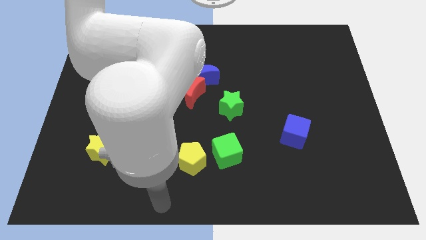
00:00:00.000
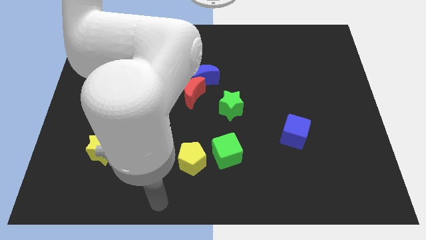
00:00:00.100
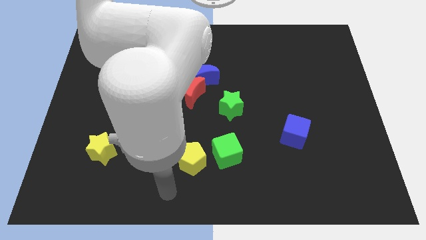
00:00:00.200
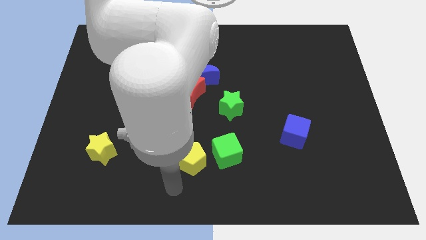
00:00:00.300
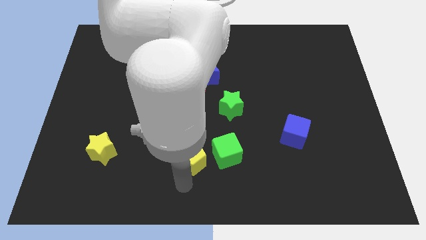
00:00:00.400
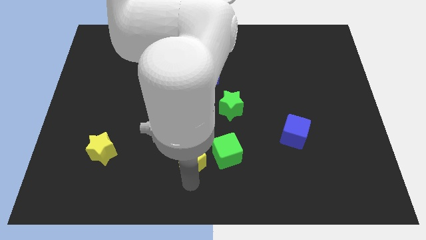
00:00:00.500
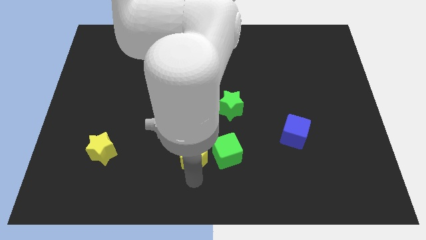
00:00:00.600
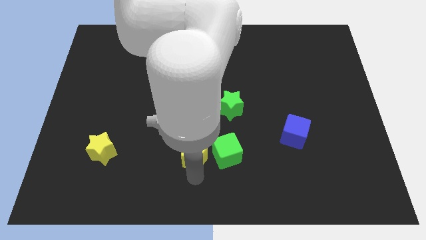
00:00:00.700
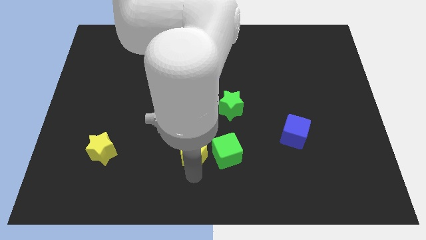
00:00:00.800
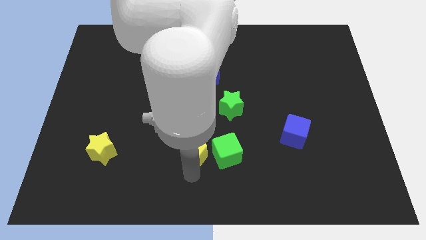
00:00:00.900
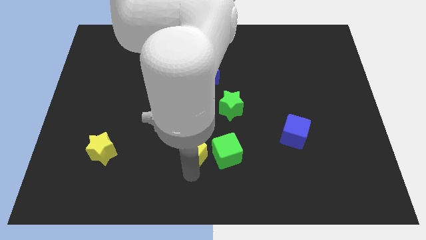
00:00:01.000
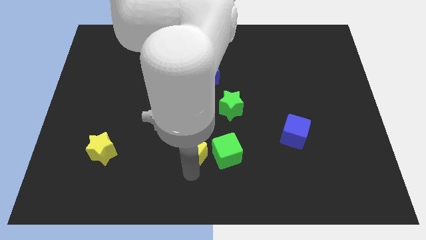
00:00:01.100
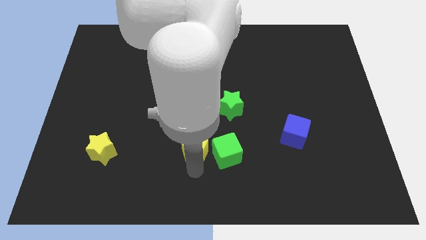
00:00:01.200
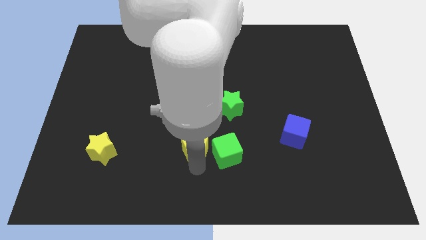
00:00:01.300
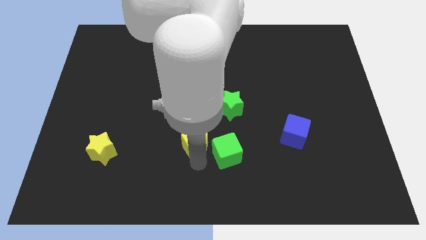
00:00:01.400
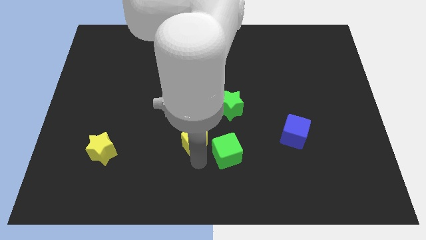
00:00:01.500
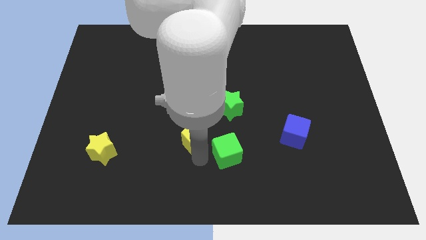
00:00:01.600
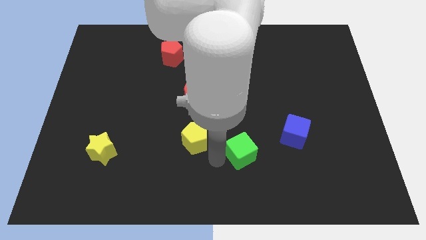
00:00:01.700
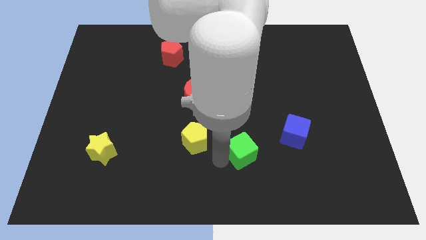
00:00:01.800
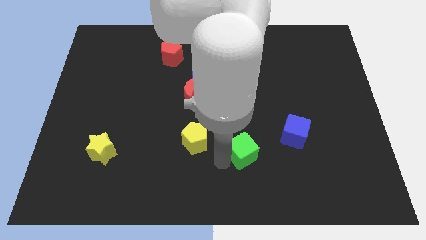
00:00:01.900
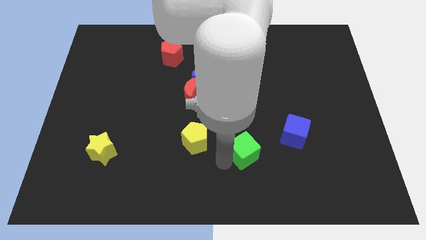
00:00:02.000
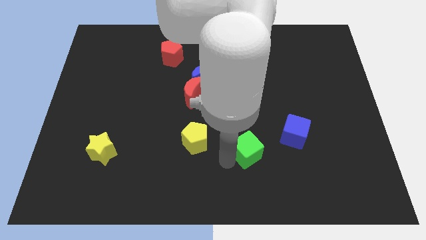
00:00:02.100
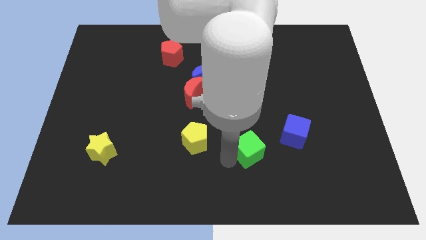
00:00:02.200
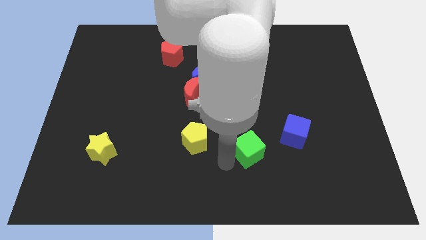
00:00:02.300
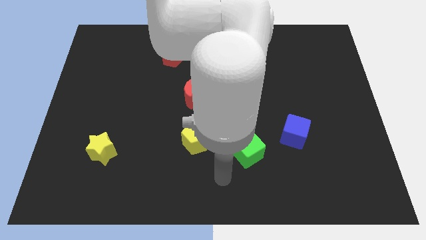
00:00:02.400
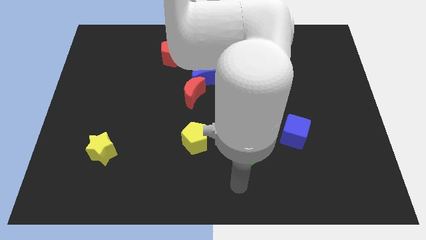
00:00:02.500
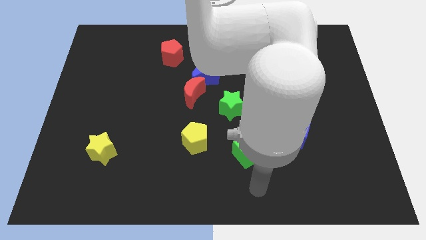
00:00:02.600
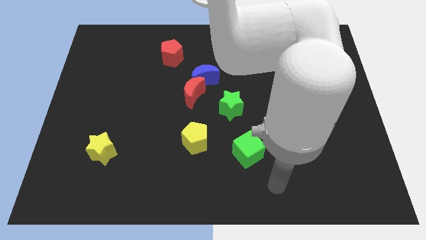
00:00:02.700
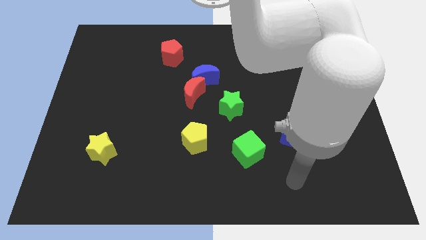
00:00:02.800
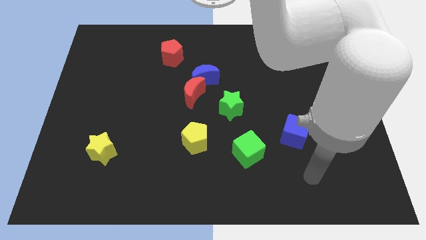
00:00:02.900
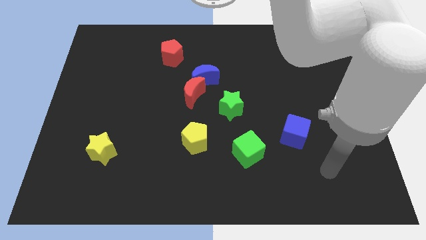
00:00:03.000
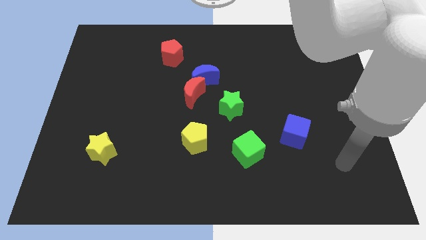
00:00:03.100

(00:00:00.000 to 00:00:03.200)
push the yellow pentagon and the green cube to make a triangle with the green star

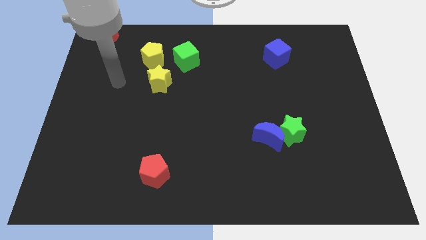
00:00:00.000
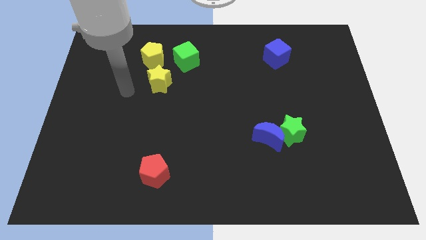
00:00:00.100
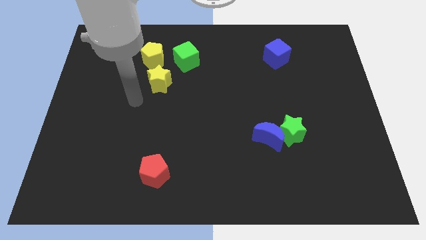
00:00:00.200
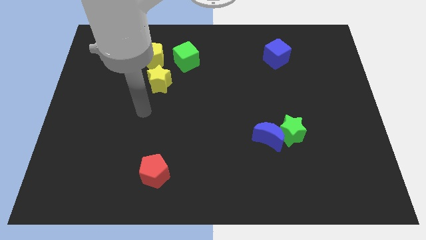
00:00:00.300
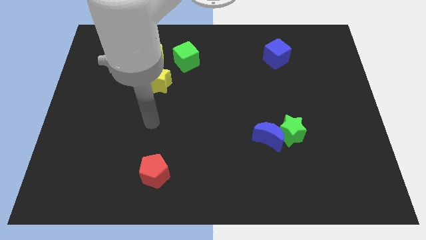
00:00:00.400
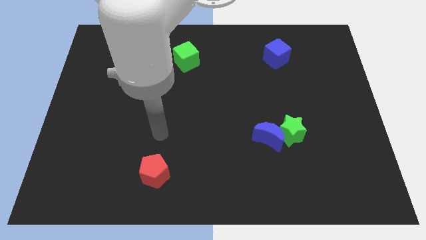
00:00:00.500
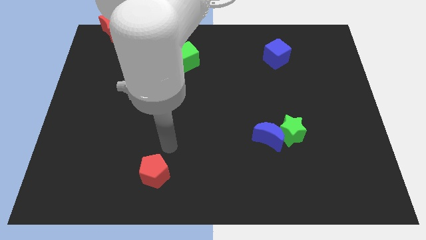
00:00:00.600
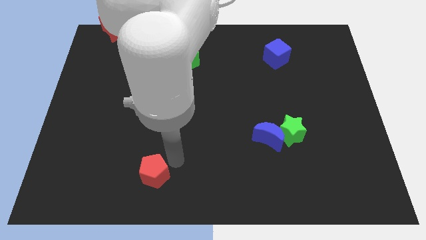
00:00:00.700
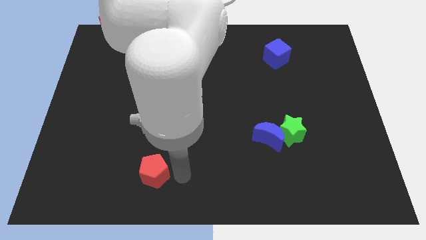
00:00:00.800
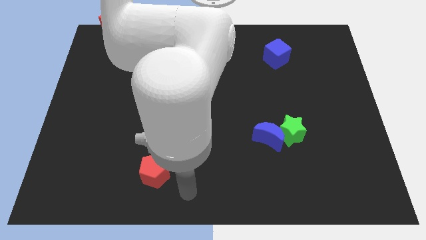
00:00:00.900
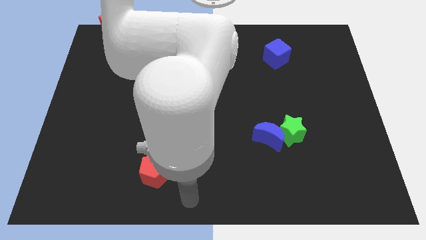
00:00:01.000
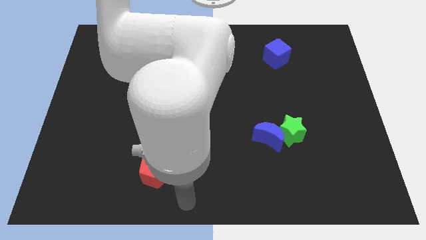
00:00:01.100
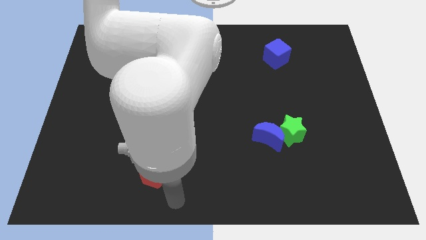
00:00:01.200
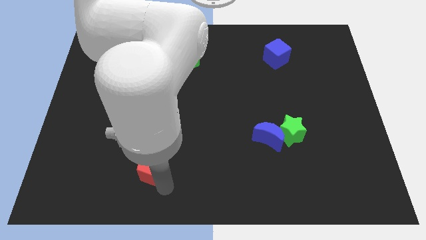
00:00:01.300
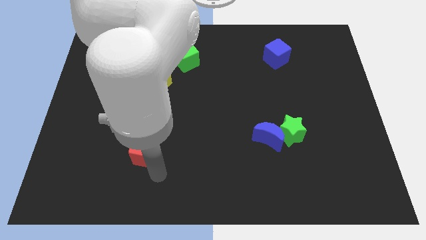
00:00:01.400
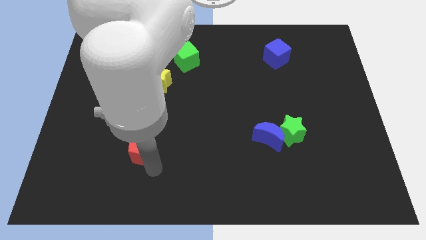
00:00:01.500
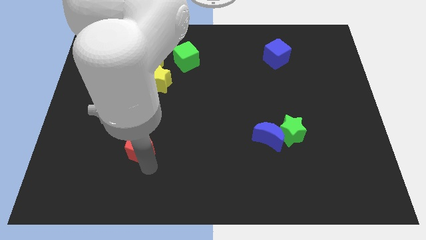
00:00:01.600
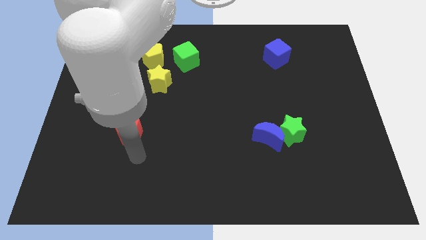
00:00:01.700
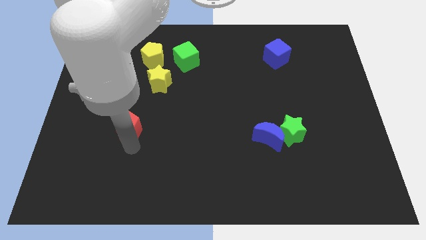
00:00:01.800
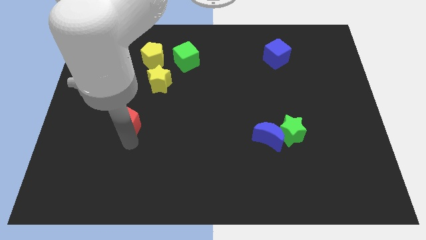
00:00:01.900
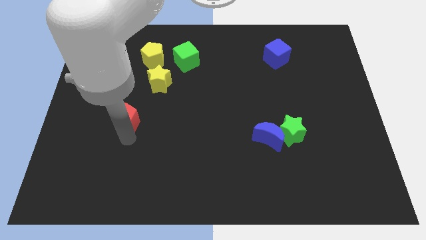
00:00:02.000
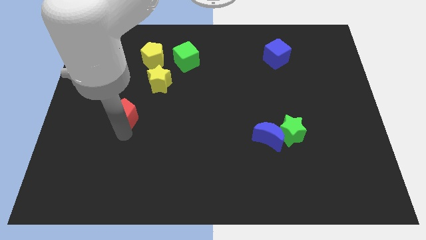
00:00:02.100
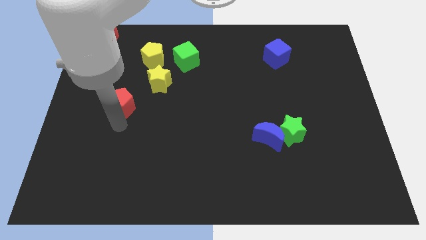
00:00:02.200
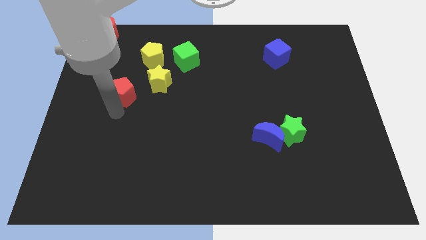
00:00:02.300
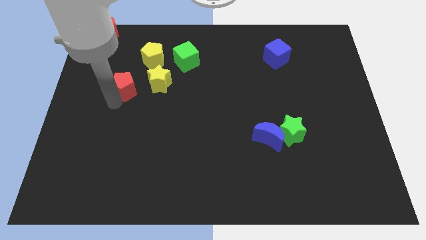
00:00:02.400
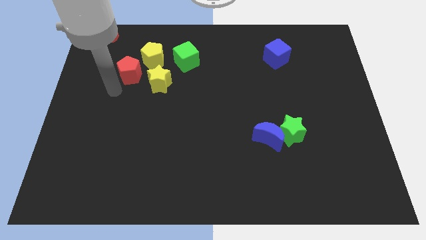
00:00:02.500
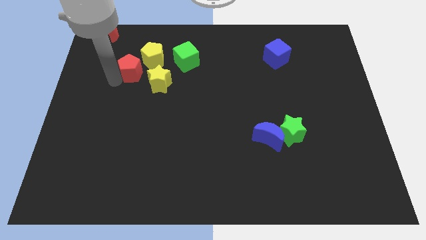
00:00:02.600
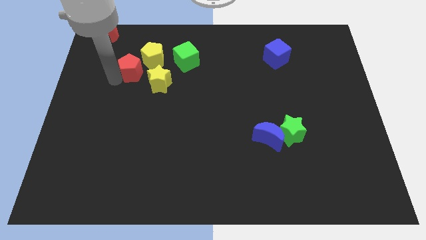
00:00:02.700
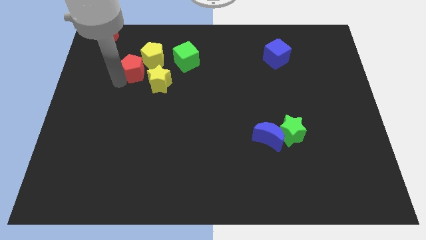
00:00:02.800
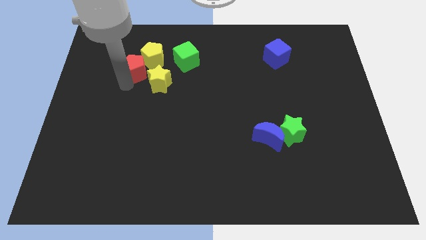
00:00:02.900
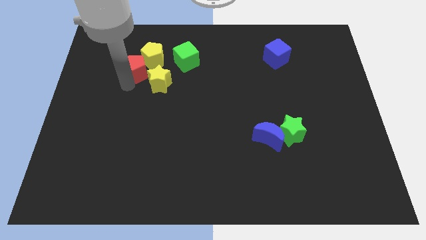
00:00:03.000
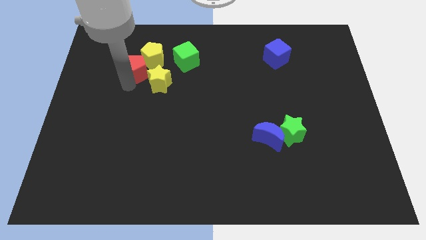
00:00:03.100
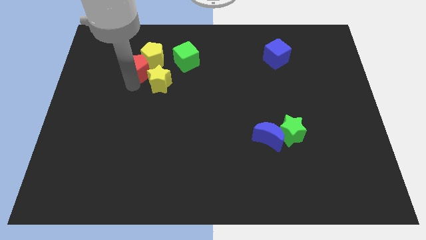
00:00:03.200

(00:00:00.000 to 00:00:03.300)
move red pentagon to the top left of yellow star

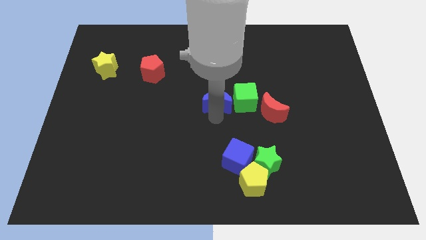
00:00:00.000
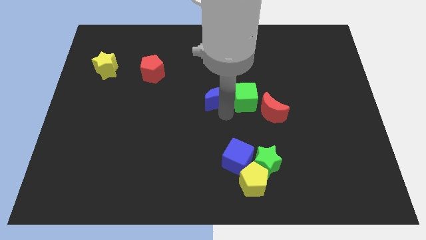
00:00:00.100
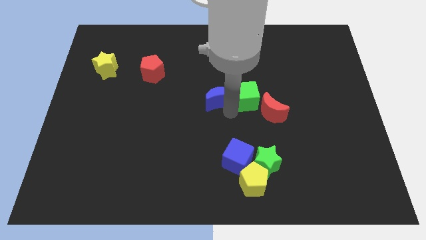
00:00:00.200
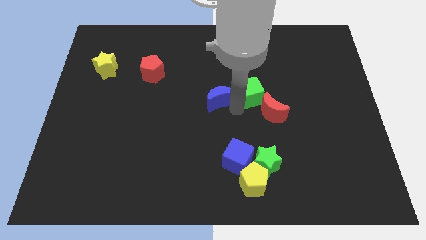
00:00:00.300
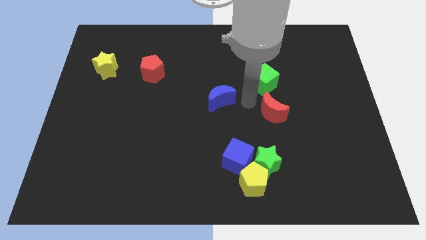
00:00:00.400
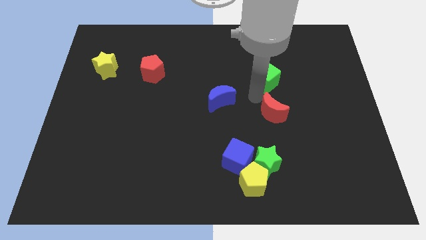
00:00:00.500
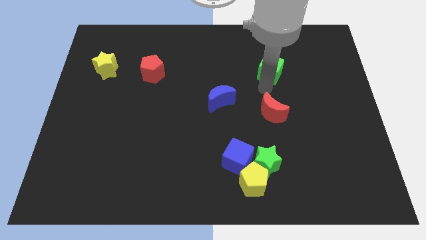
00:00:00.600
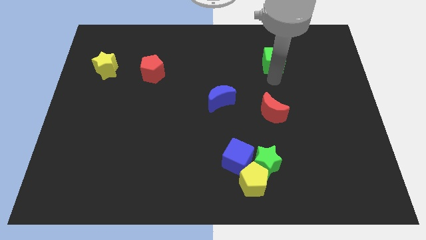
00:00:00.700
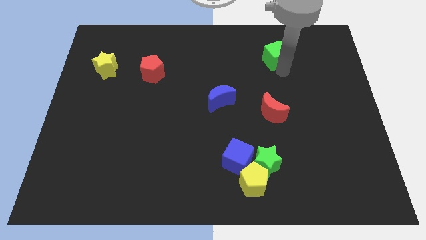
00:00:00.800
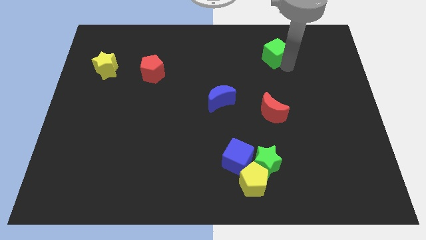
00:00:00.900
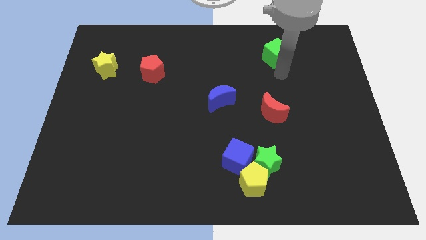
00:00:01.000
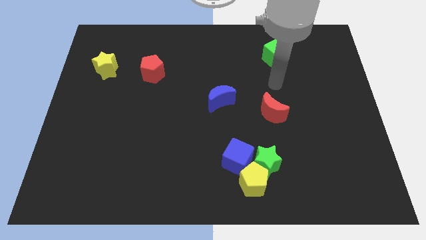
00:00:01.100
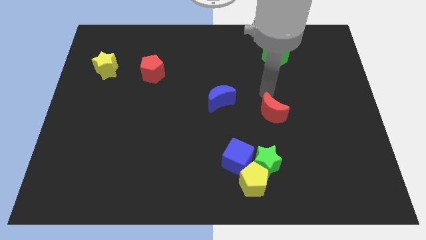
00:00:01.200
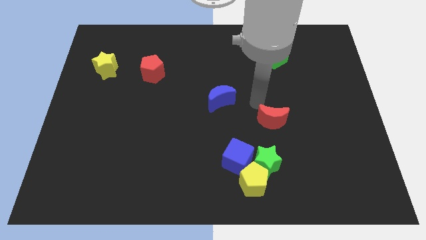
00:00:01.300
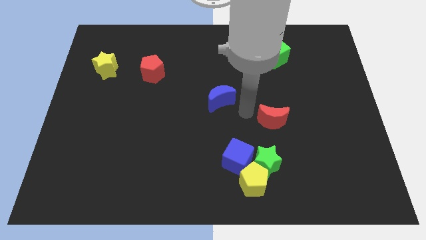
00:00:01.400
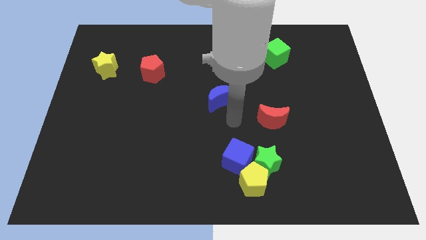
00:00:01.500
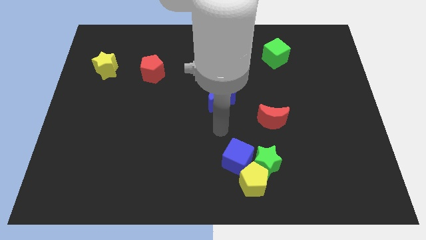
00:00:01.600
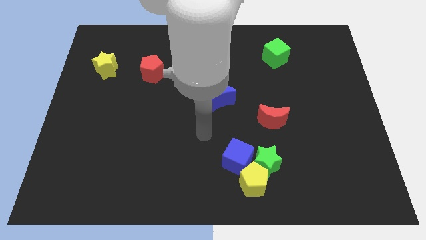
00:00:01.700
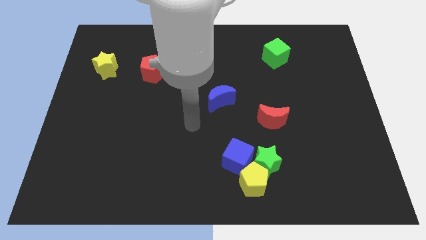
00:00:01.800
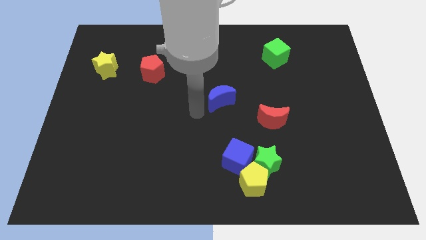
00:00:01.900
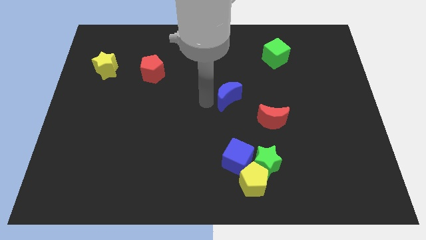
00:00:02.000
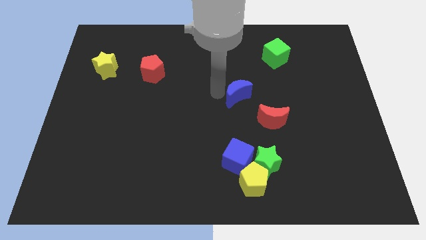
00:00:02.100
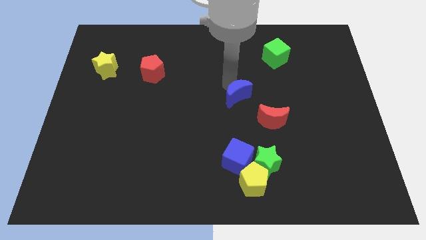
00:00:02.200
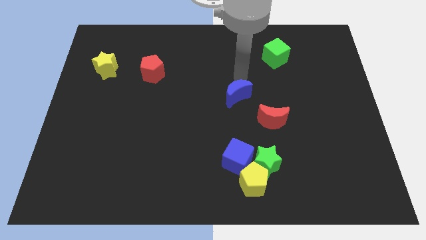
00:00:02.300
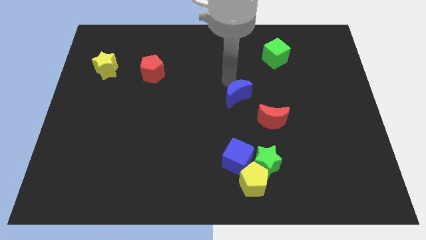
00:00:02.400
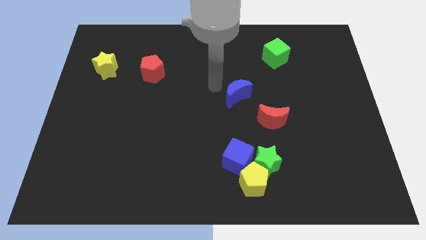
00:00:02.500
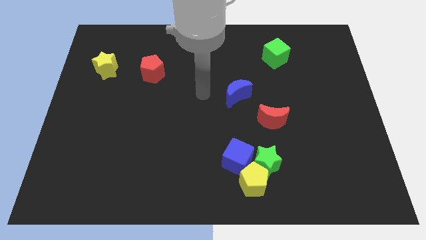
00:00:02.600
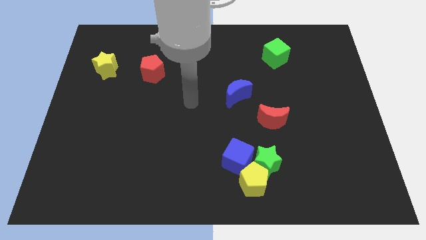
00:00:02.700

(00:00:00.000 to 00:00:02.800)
separate the green cube upwards and push the blue moon diagonally
